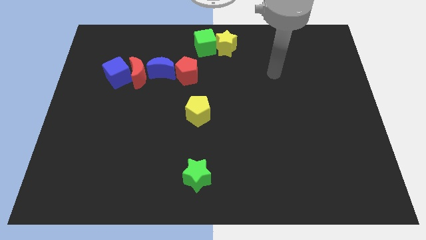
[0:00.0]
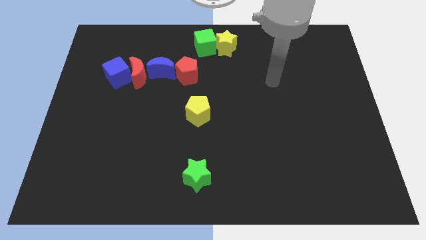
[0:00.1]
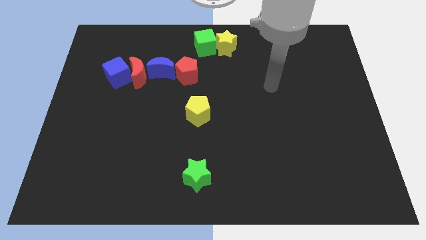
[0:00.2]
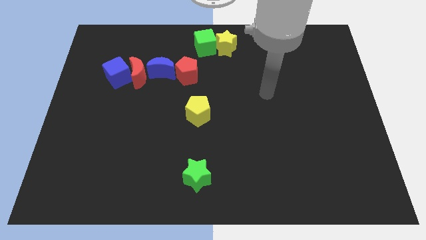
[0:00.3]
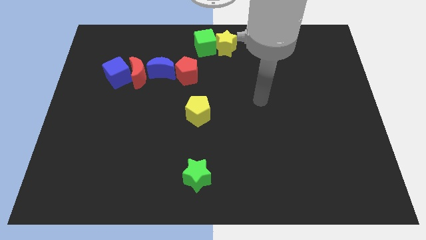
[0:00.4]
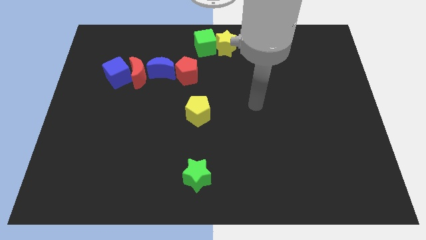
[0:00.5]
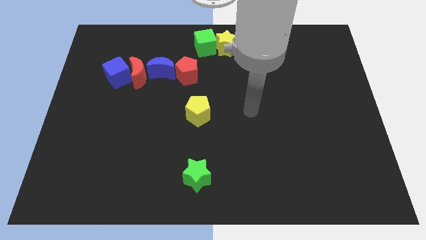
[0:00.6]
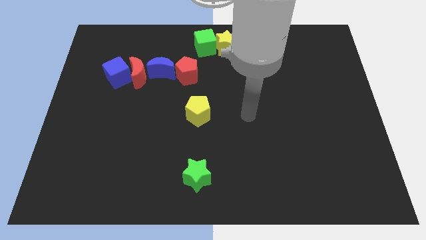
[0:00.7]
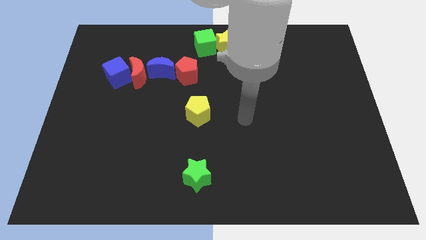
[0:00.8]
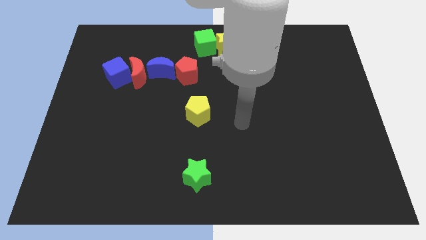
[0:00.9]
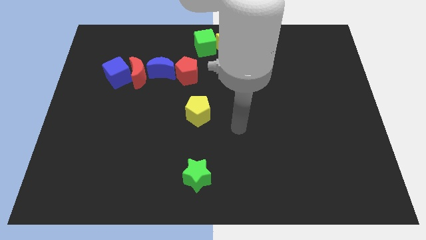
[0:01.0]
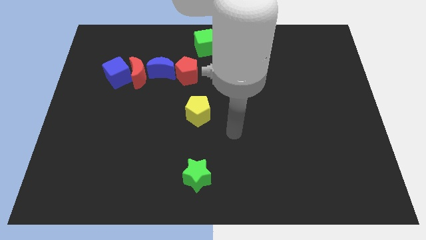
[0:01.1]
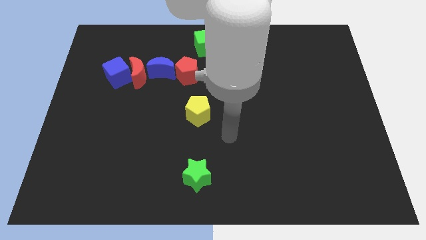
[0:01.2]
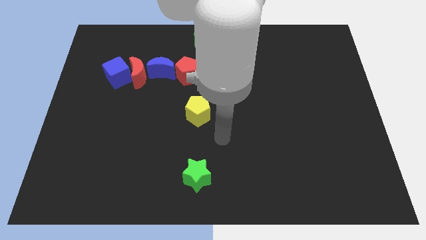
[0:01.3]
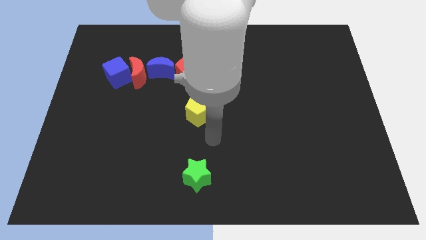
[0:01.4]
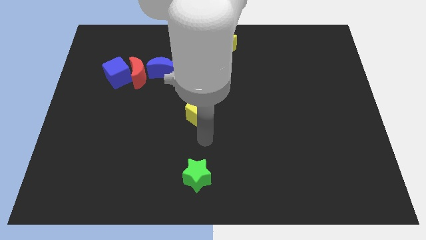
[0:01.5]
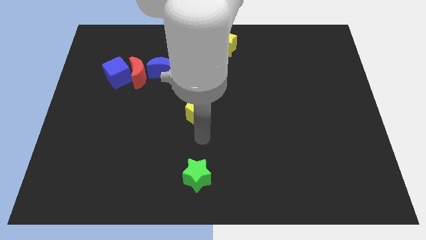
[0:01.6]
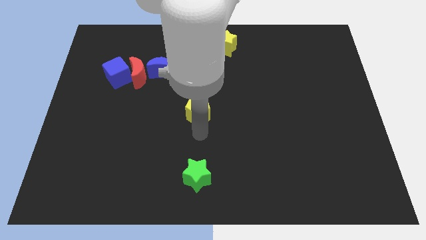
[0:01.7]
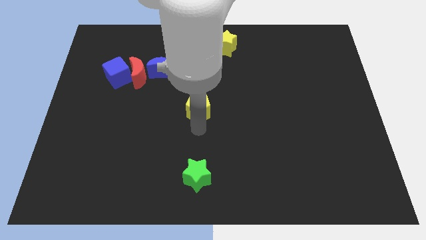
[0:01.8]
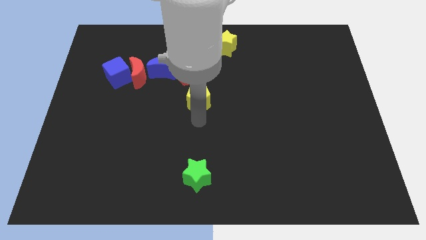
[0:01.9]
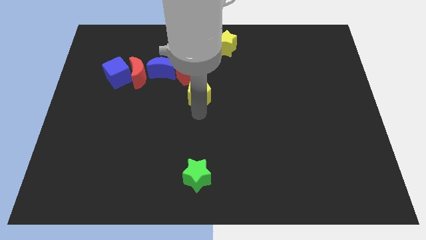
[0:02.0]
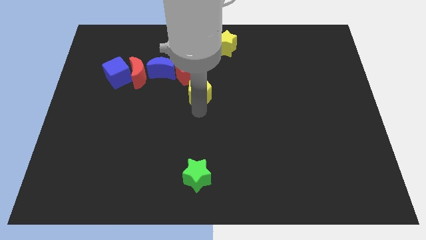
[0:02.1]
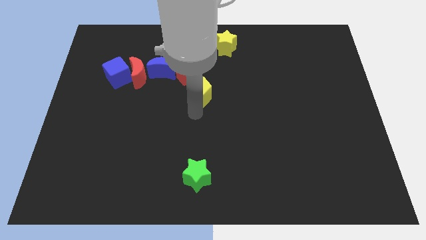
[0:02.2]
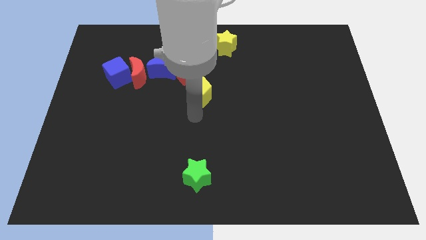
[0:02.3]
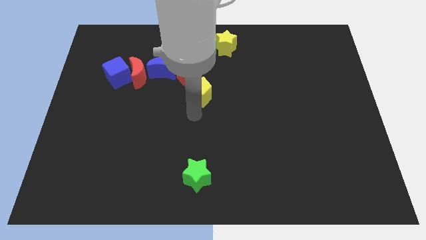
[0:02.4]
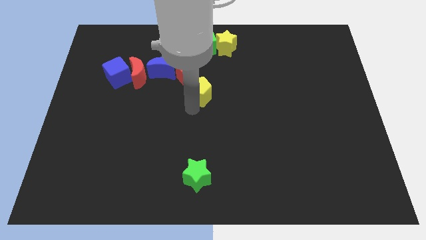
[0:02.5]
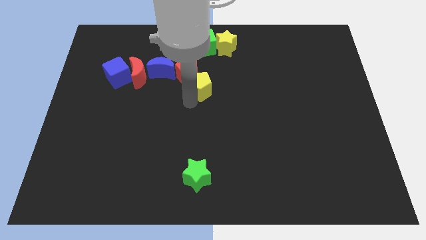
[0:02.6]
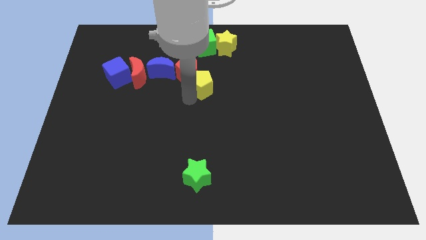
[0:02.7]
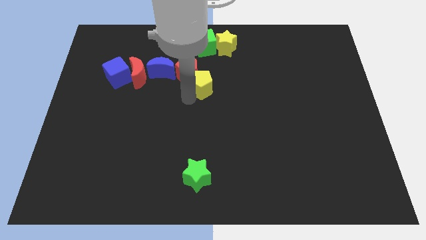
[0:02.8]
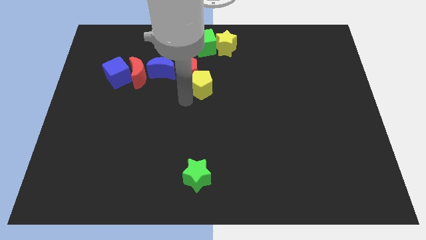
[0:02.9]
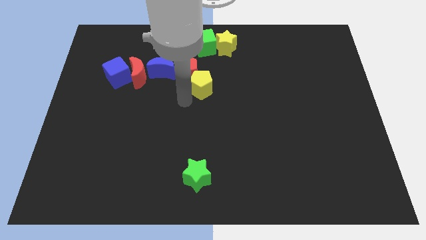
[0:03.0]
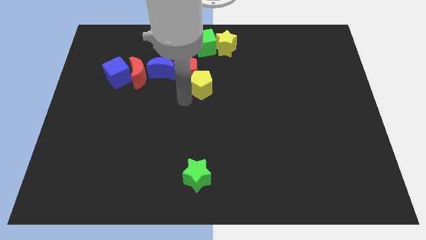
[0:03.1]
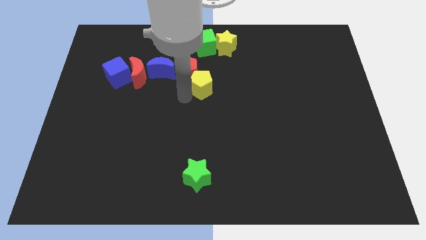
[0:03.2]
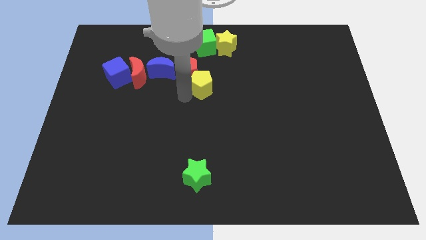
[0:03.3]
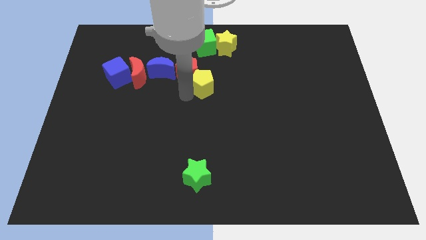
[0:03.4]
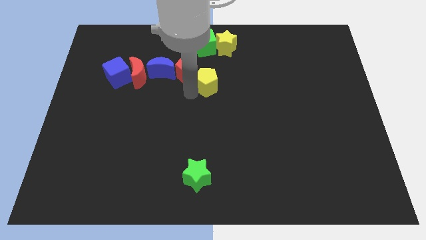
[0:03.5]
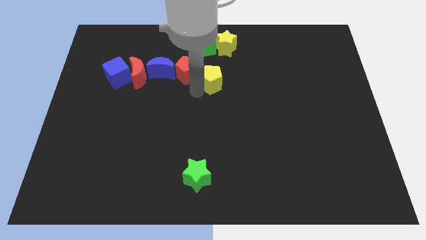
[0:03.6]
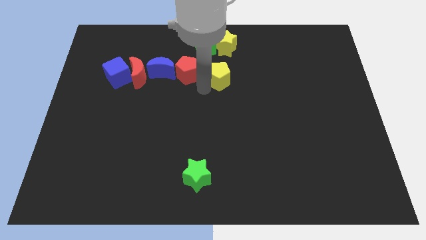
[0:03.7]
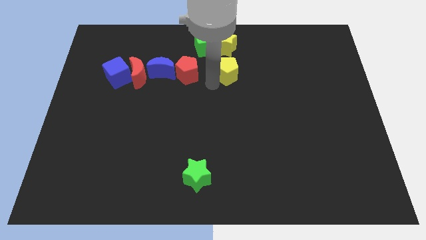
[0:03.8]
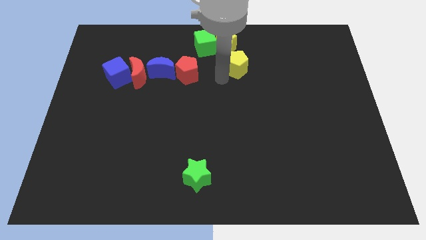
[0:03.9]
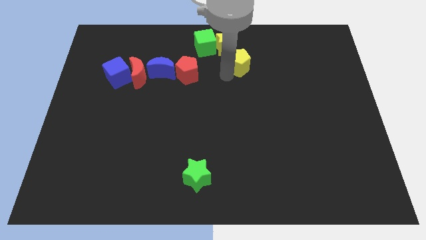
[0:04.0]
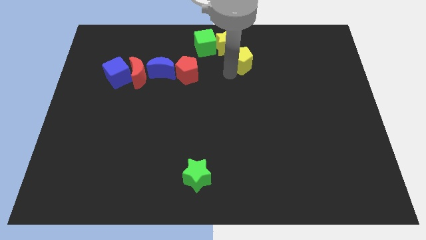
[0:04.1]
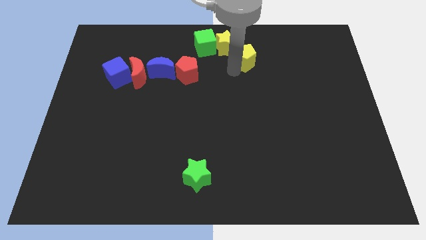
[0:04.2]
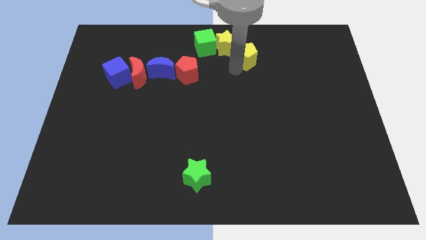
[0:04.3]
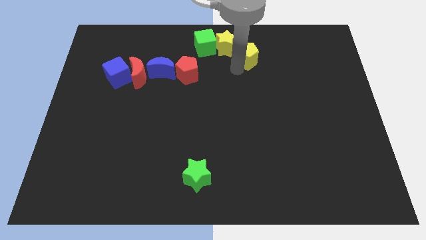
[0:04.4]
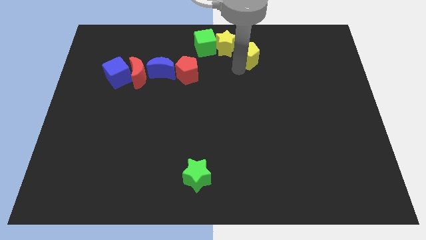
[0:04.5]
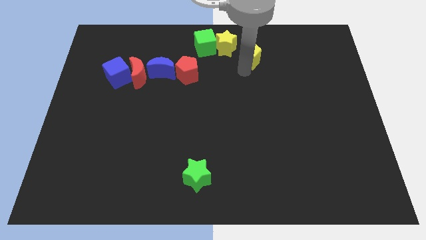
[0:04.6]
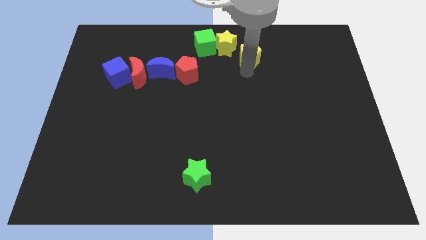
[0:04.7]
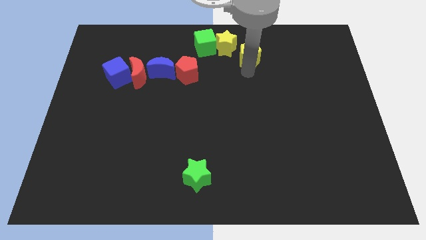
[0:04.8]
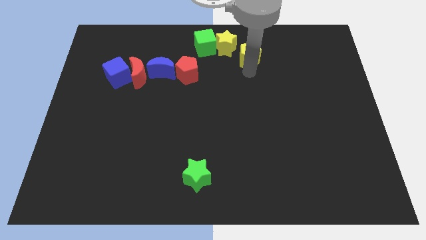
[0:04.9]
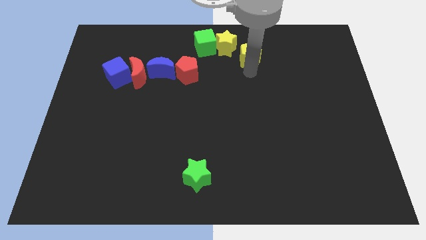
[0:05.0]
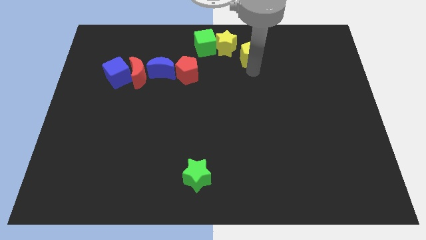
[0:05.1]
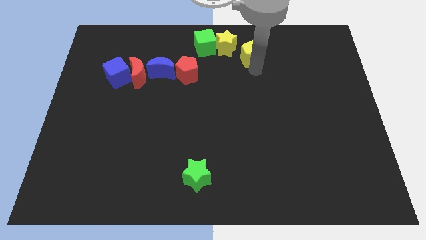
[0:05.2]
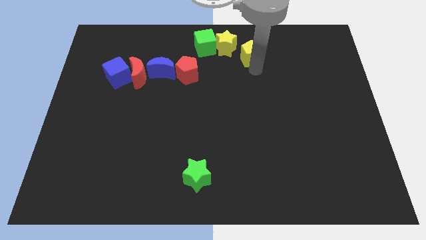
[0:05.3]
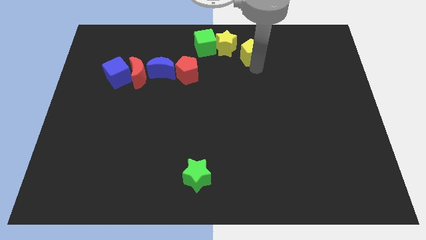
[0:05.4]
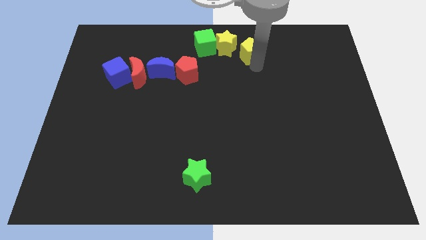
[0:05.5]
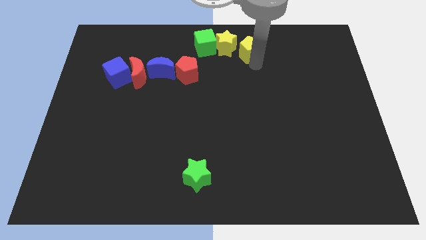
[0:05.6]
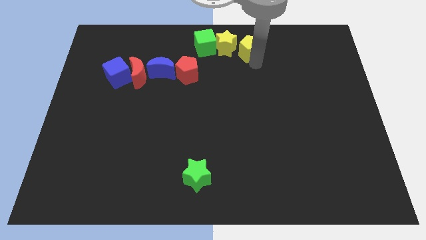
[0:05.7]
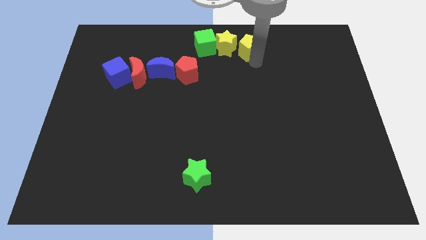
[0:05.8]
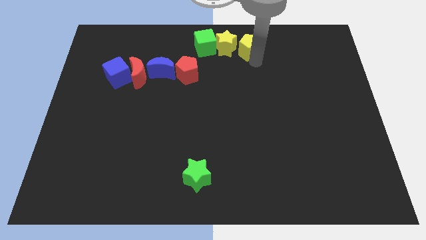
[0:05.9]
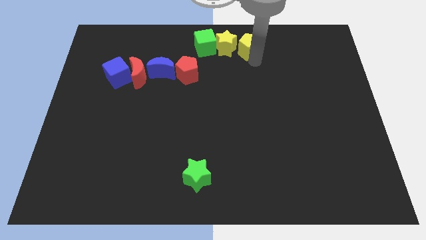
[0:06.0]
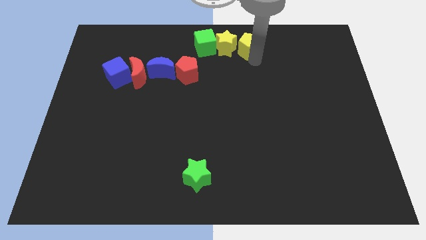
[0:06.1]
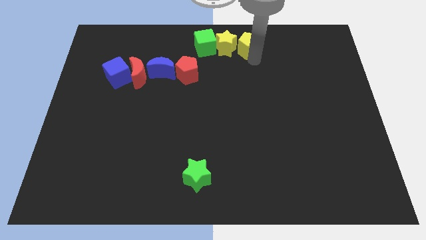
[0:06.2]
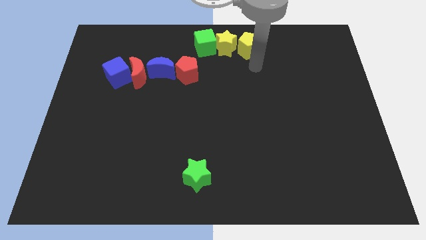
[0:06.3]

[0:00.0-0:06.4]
slide the yellow pentagon right to the yellow star

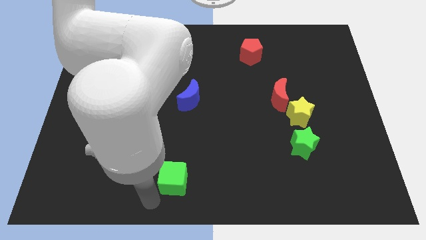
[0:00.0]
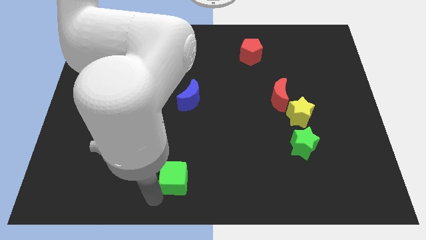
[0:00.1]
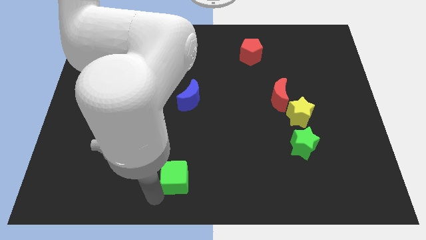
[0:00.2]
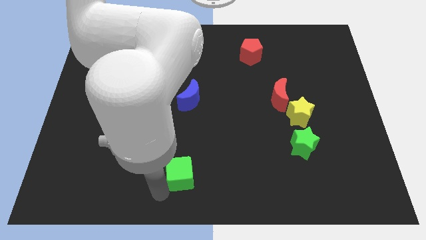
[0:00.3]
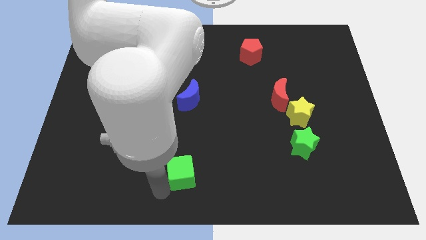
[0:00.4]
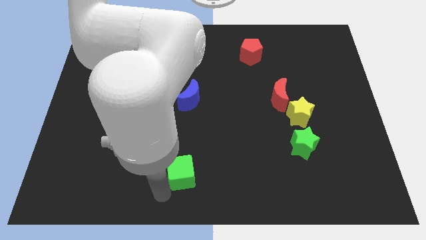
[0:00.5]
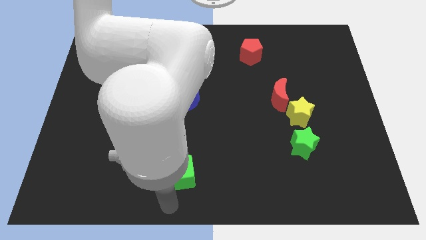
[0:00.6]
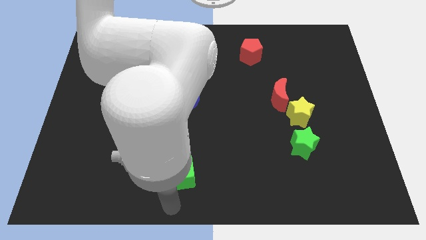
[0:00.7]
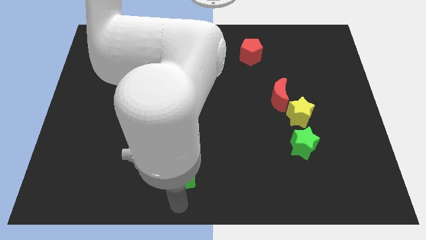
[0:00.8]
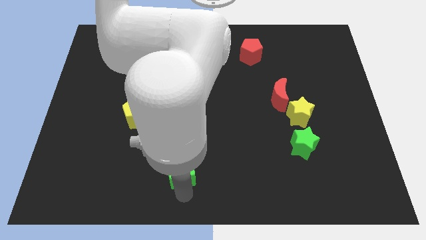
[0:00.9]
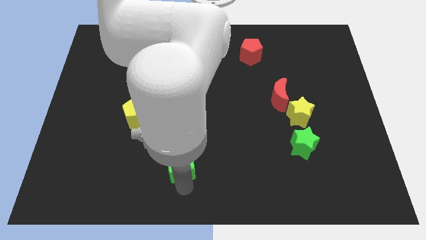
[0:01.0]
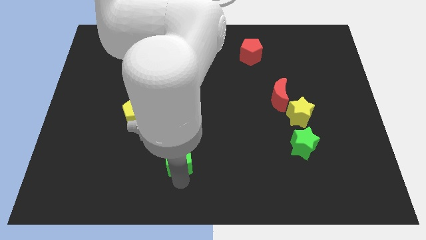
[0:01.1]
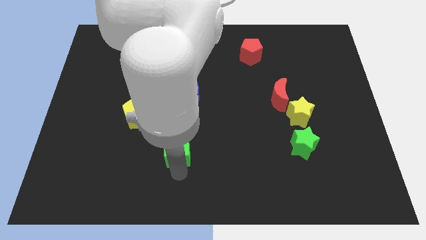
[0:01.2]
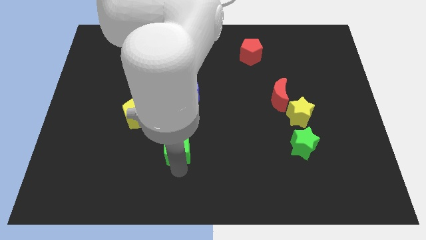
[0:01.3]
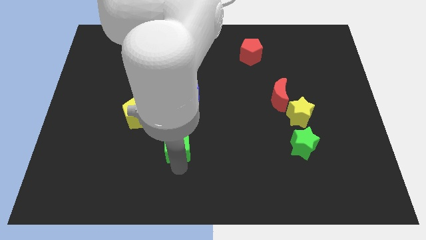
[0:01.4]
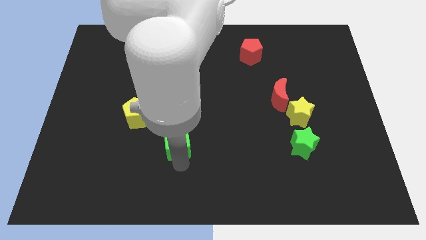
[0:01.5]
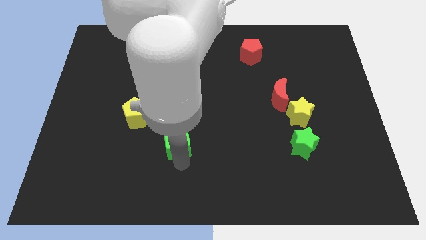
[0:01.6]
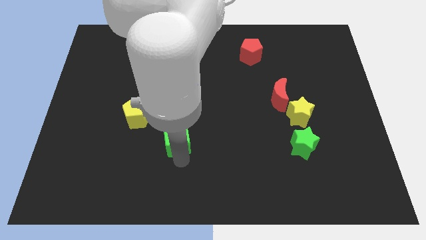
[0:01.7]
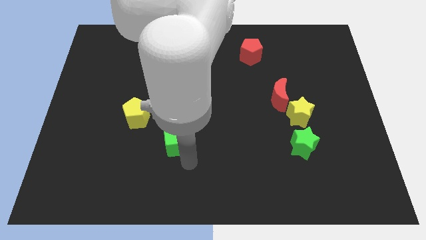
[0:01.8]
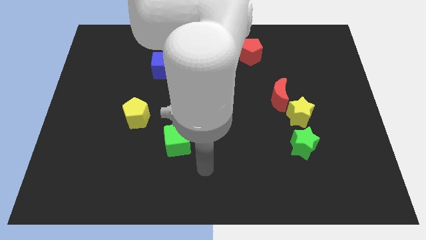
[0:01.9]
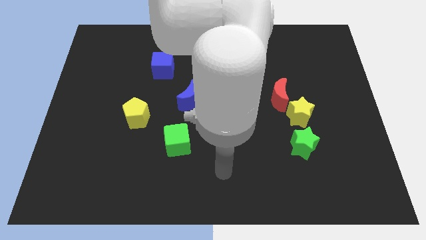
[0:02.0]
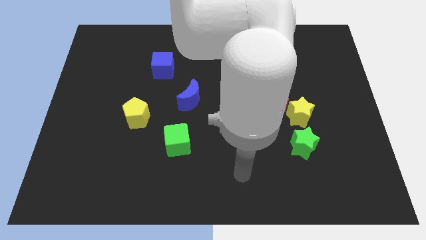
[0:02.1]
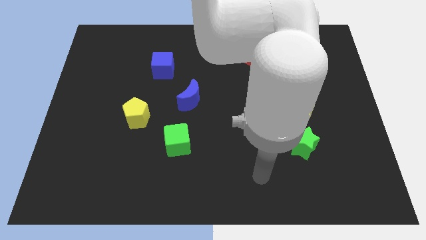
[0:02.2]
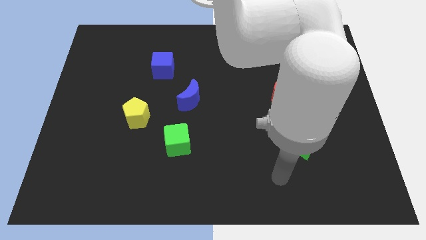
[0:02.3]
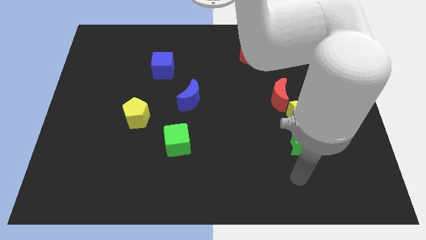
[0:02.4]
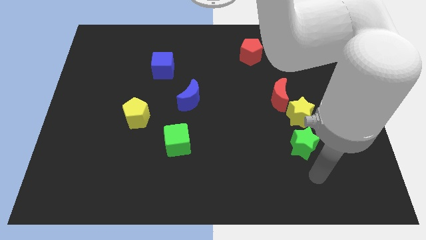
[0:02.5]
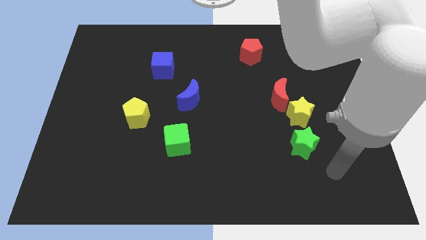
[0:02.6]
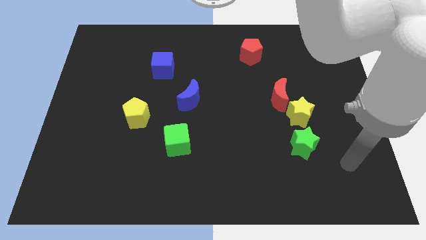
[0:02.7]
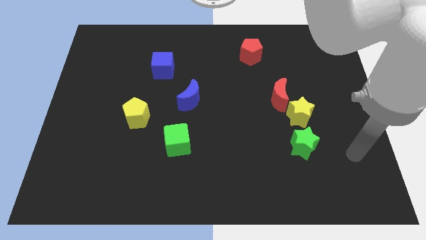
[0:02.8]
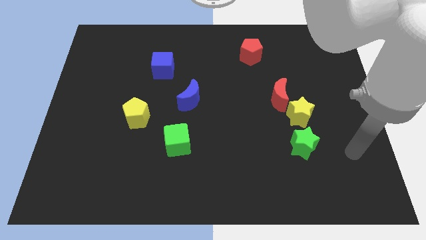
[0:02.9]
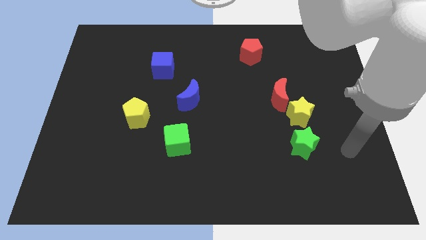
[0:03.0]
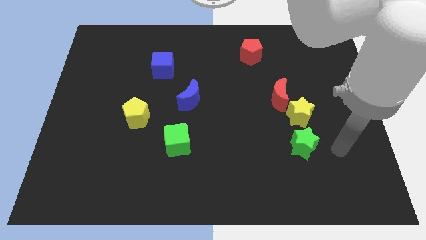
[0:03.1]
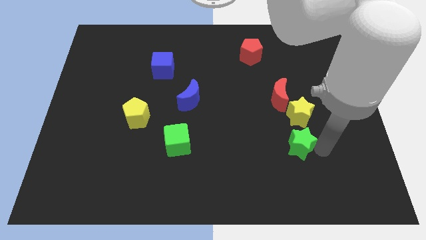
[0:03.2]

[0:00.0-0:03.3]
move the green cube to the bottom of blue crescent
